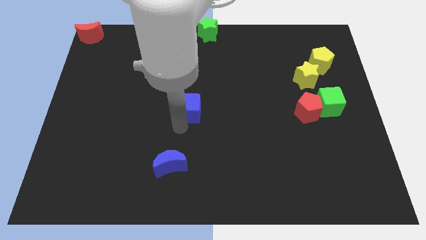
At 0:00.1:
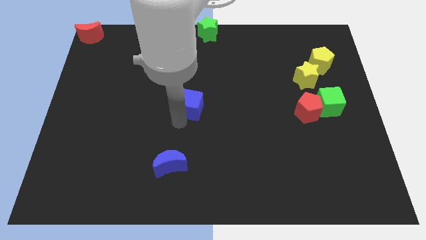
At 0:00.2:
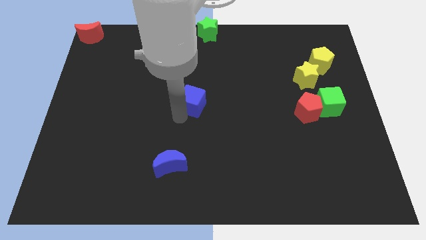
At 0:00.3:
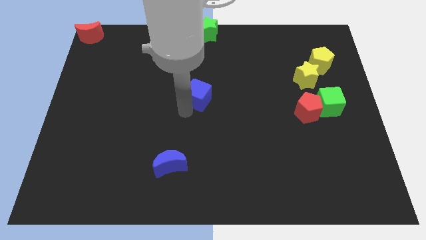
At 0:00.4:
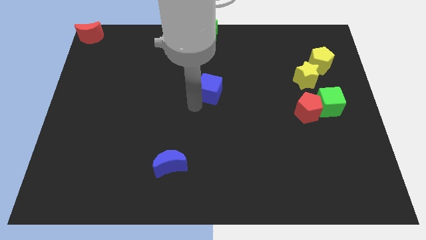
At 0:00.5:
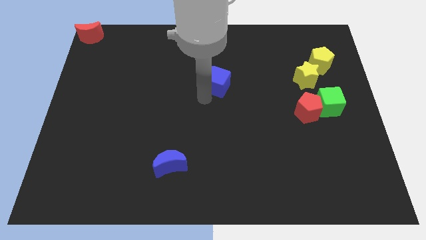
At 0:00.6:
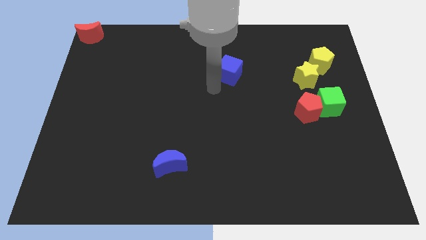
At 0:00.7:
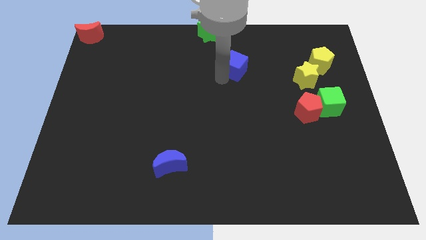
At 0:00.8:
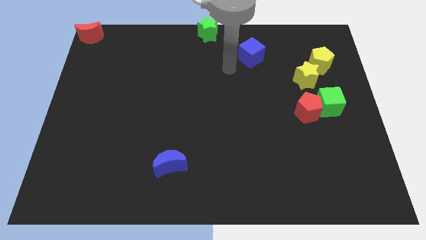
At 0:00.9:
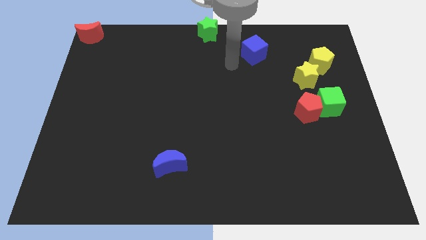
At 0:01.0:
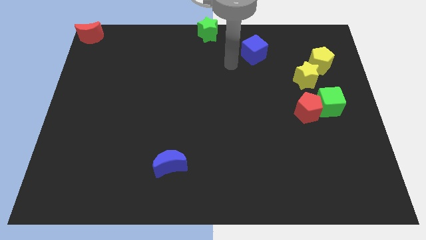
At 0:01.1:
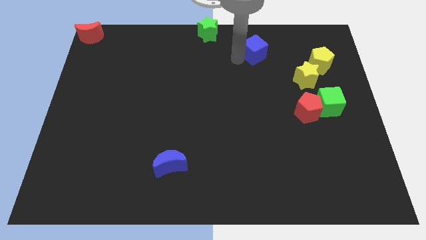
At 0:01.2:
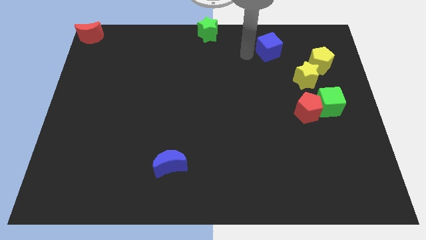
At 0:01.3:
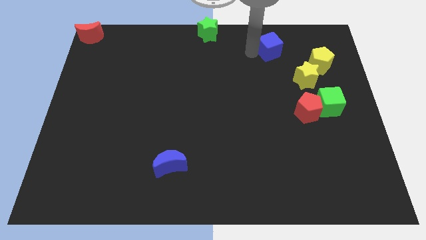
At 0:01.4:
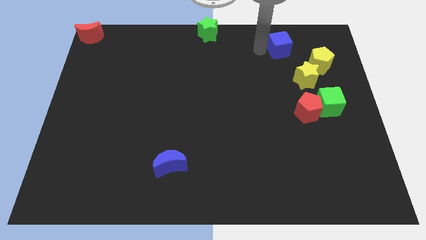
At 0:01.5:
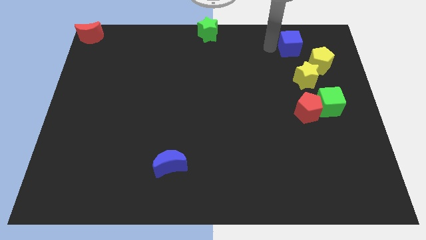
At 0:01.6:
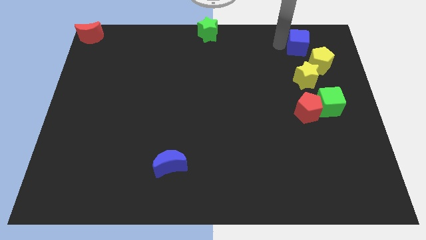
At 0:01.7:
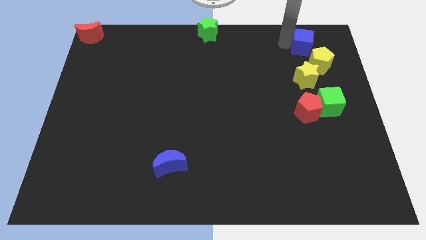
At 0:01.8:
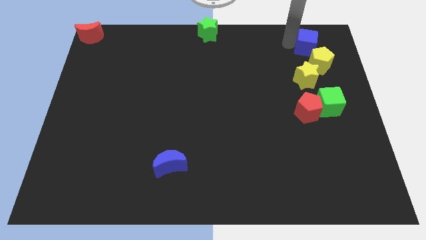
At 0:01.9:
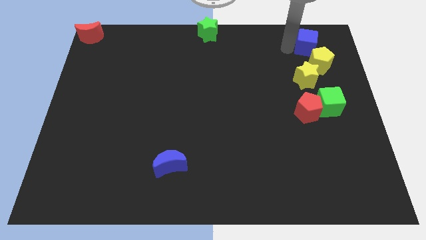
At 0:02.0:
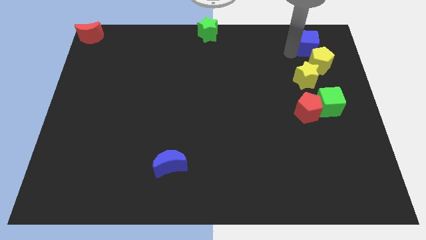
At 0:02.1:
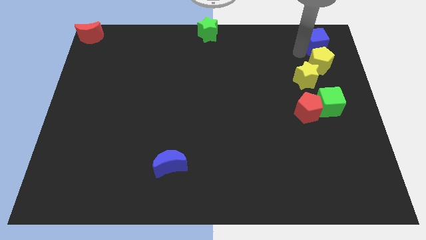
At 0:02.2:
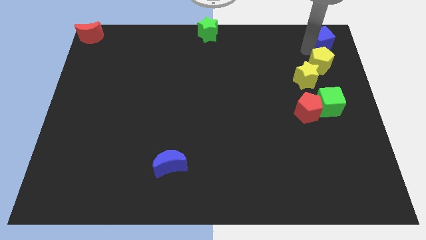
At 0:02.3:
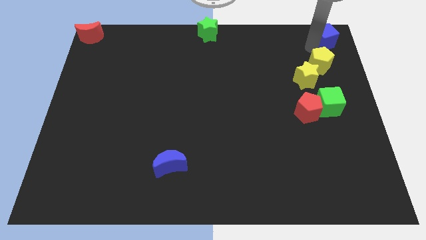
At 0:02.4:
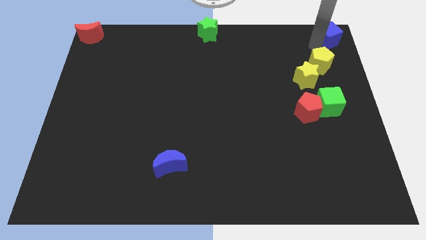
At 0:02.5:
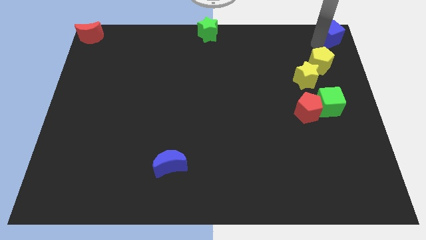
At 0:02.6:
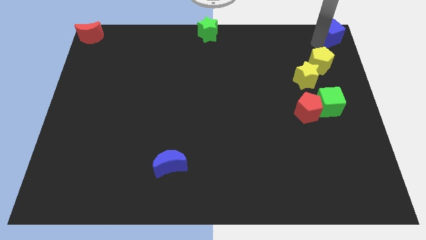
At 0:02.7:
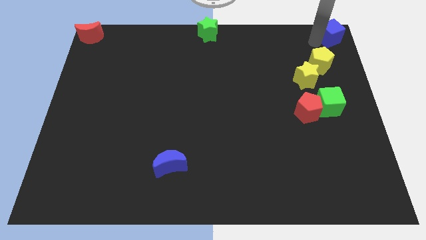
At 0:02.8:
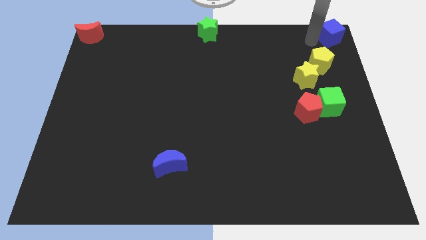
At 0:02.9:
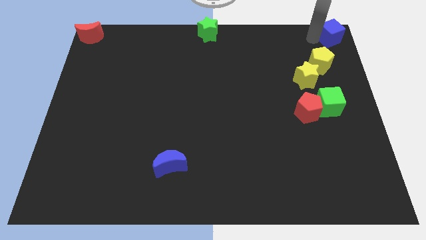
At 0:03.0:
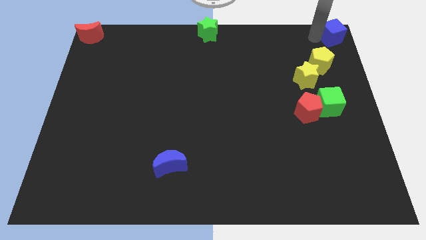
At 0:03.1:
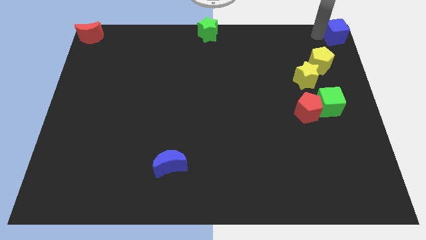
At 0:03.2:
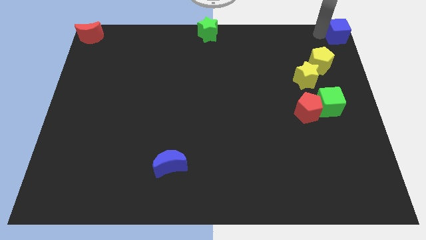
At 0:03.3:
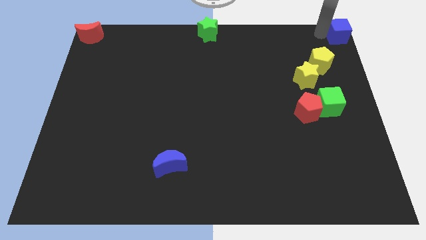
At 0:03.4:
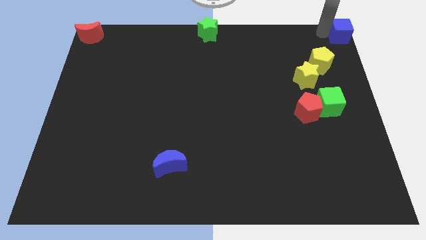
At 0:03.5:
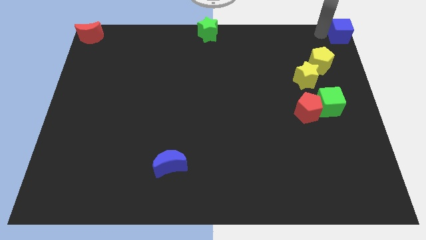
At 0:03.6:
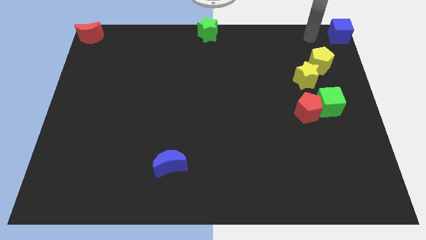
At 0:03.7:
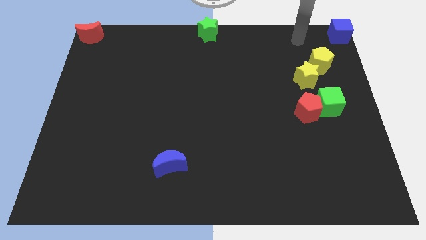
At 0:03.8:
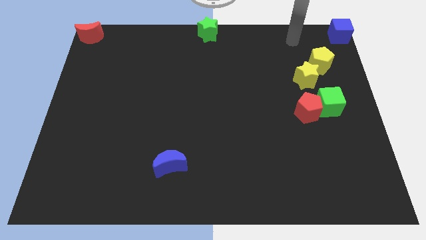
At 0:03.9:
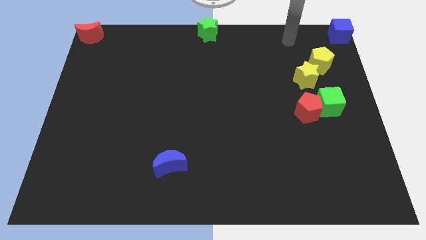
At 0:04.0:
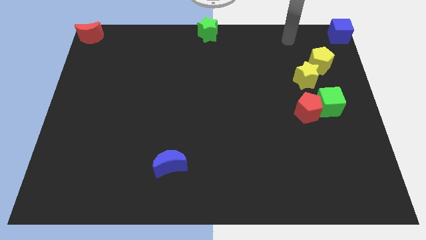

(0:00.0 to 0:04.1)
place blue cube to the top right of the board

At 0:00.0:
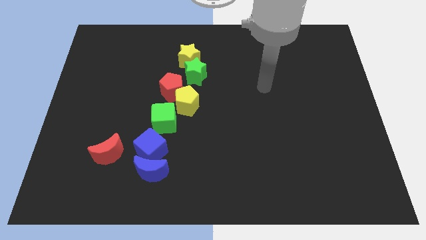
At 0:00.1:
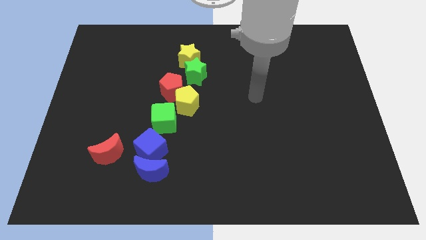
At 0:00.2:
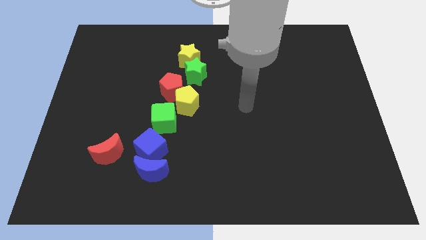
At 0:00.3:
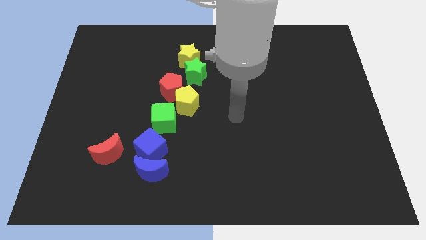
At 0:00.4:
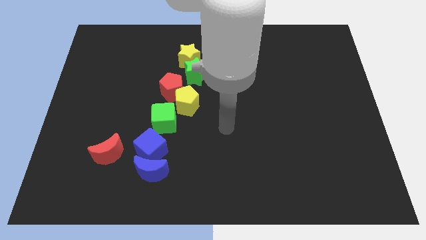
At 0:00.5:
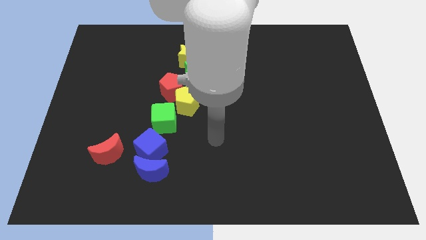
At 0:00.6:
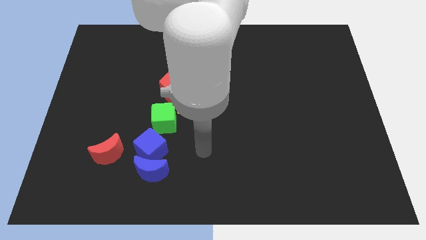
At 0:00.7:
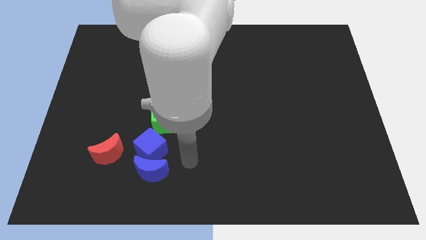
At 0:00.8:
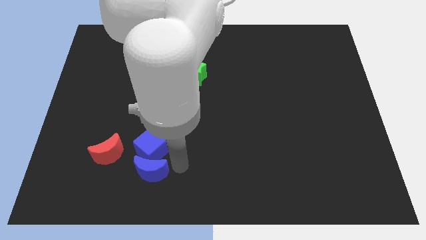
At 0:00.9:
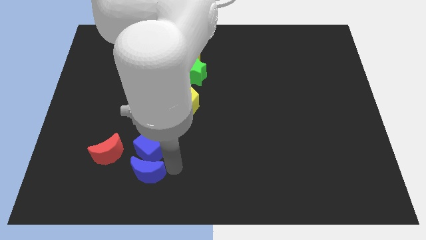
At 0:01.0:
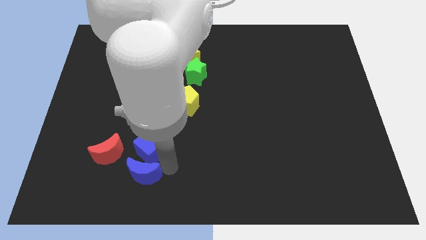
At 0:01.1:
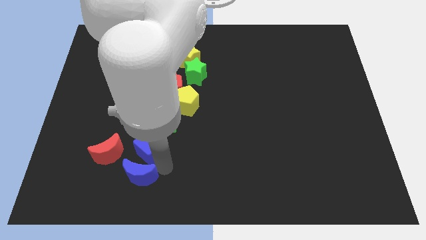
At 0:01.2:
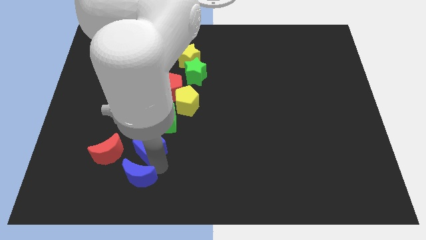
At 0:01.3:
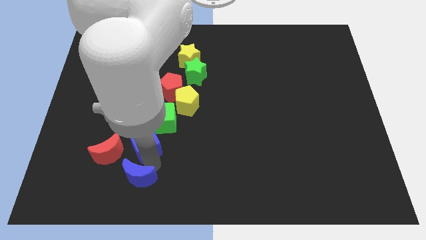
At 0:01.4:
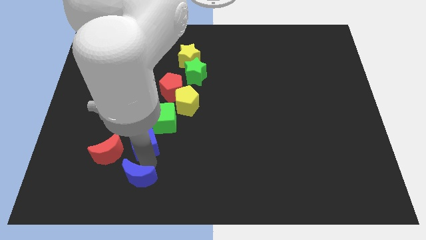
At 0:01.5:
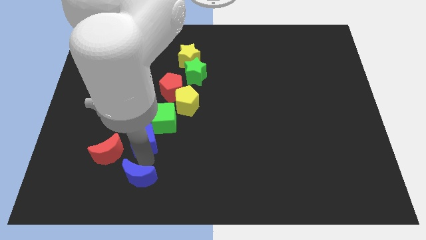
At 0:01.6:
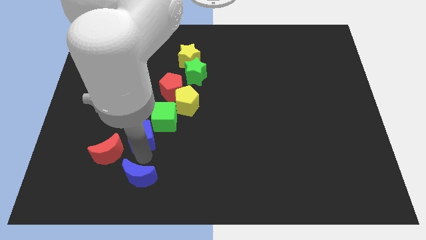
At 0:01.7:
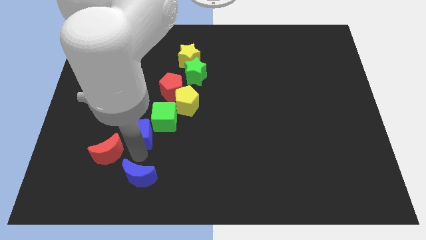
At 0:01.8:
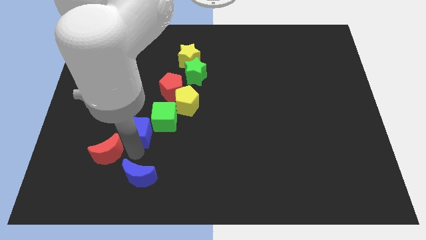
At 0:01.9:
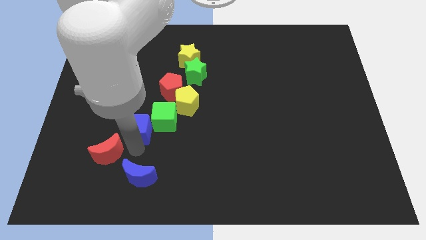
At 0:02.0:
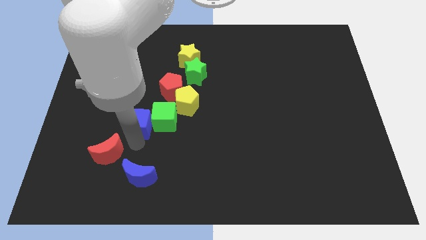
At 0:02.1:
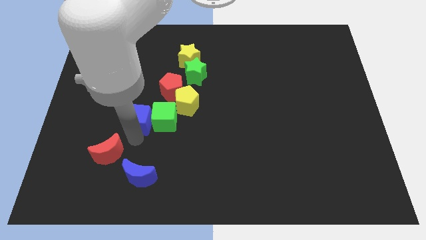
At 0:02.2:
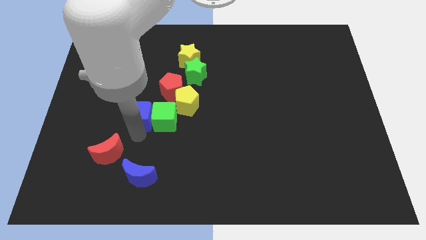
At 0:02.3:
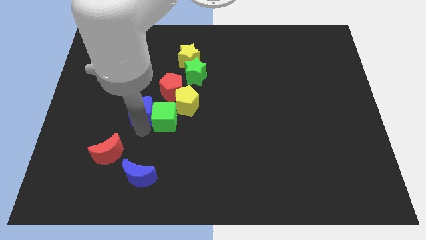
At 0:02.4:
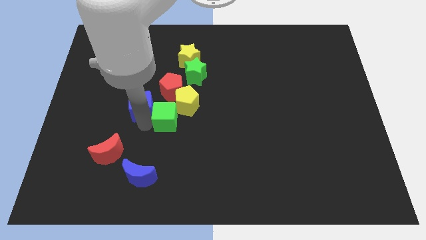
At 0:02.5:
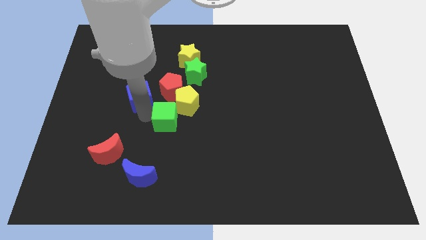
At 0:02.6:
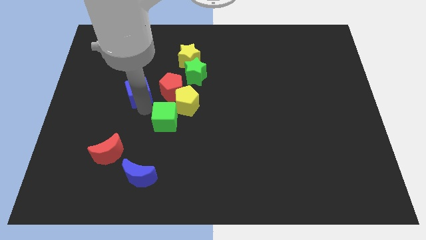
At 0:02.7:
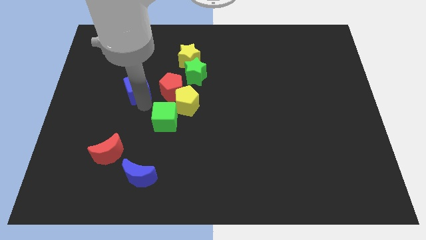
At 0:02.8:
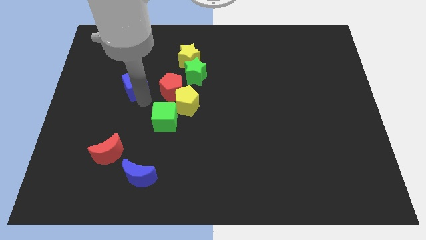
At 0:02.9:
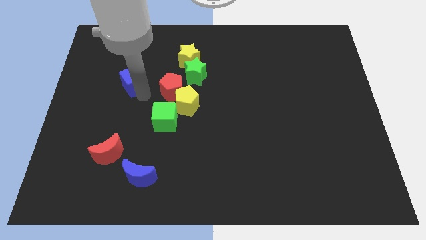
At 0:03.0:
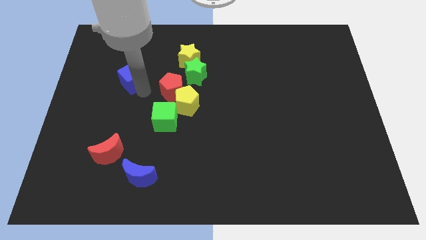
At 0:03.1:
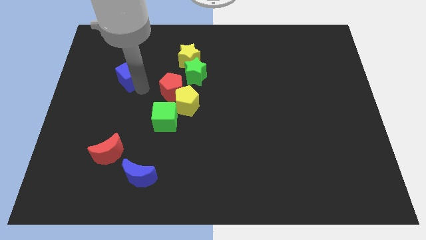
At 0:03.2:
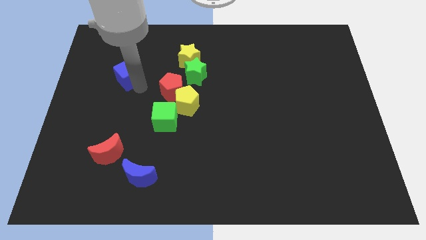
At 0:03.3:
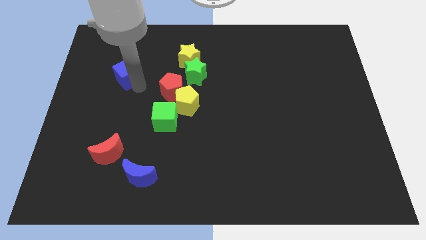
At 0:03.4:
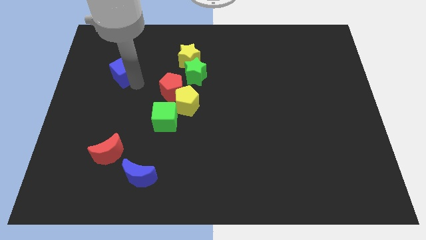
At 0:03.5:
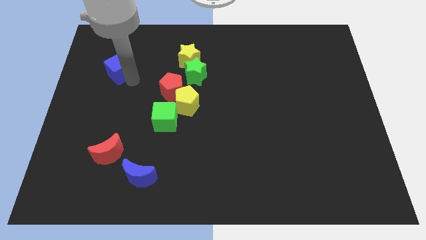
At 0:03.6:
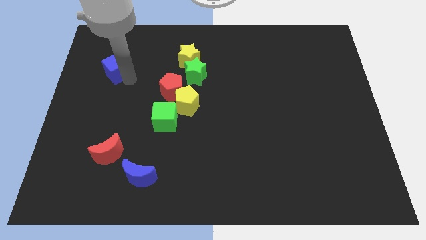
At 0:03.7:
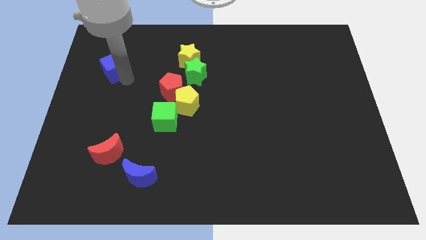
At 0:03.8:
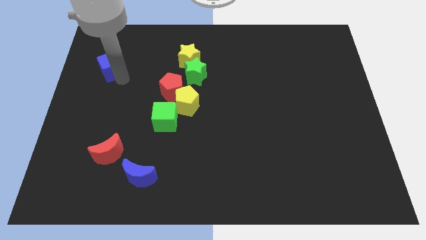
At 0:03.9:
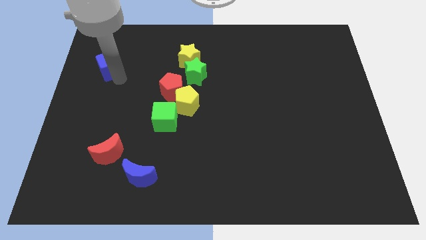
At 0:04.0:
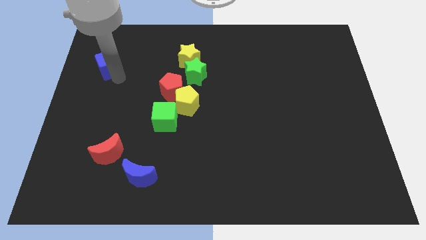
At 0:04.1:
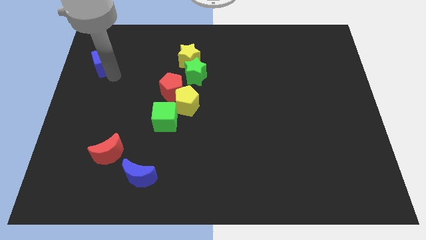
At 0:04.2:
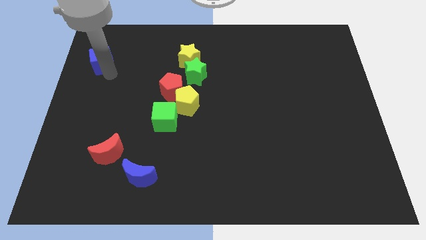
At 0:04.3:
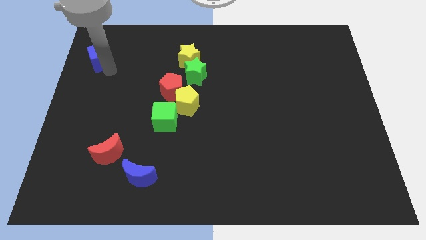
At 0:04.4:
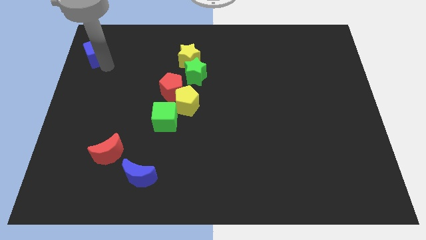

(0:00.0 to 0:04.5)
slide the blue block towards the top left side

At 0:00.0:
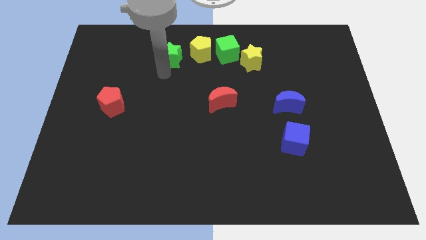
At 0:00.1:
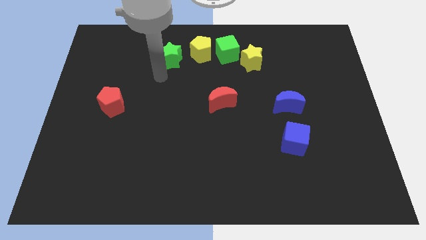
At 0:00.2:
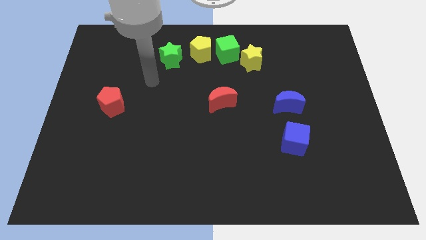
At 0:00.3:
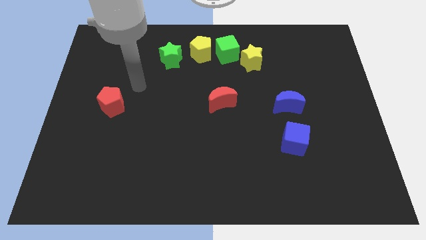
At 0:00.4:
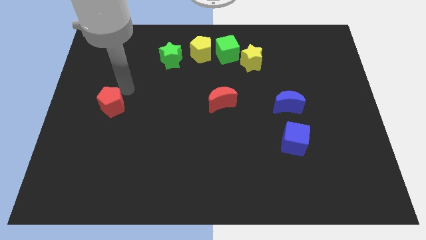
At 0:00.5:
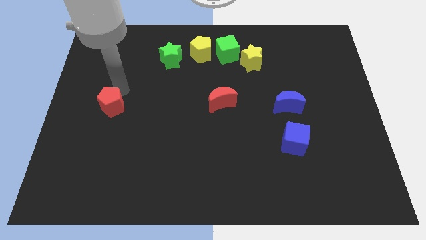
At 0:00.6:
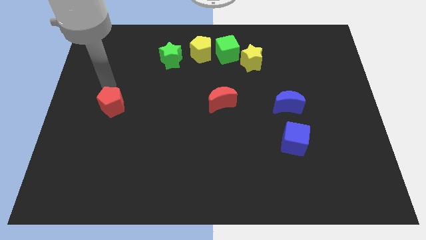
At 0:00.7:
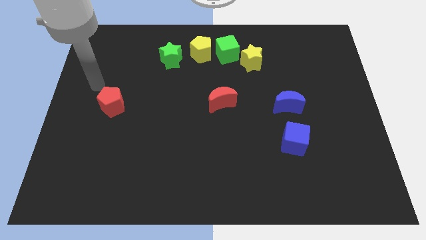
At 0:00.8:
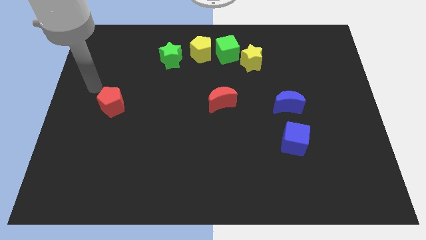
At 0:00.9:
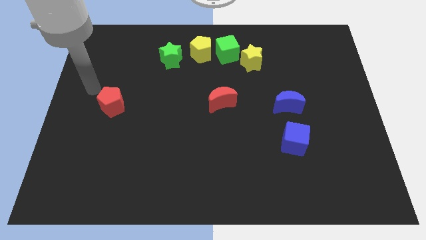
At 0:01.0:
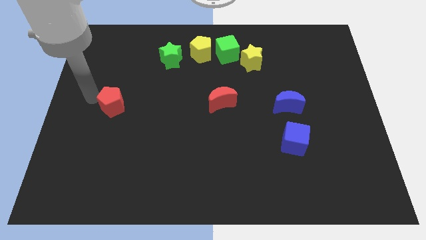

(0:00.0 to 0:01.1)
point your arm at the left of the red pentagon
